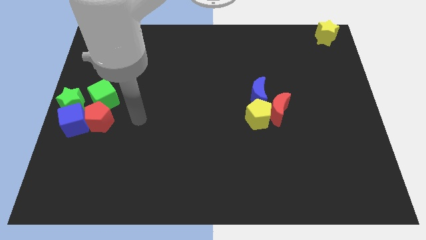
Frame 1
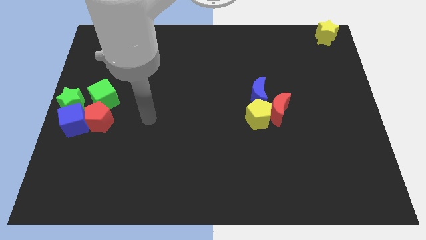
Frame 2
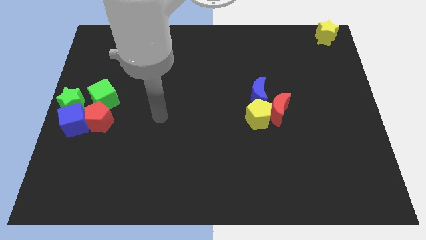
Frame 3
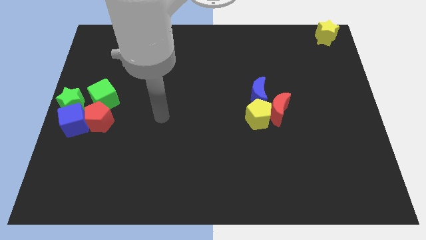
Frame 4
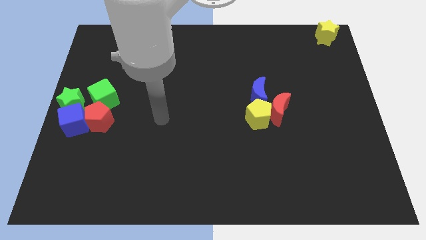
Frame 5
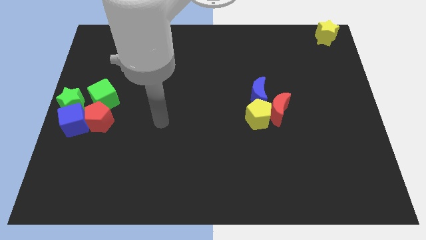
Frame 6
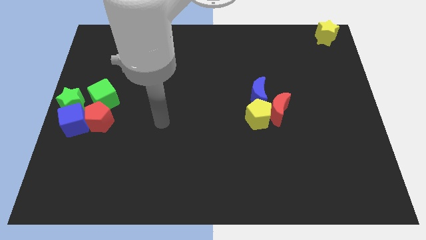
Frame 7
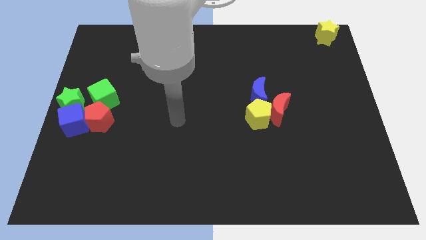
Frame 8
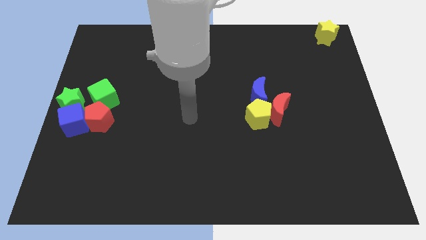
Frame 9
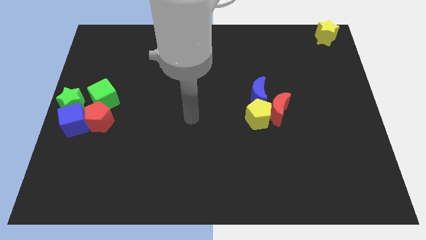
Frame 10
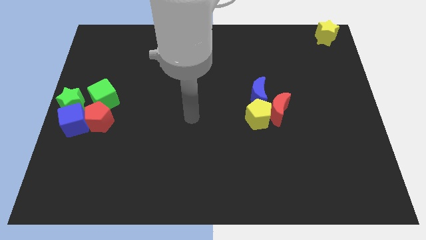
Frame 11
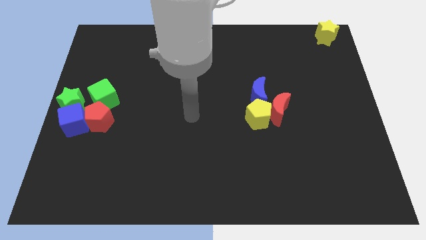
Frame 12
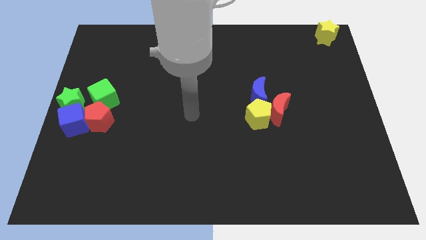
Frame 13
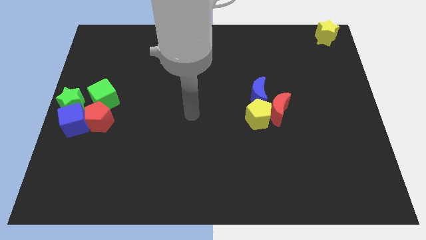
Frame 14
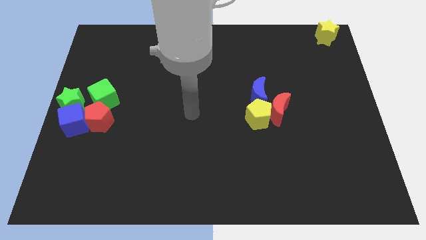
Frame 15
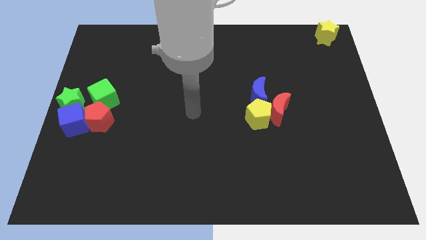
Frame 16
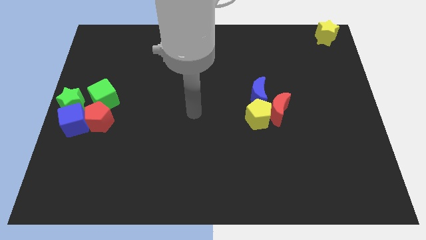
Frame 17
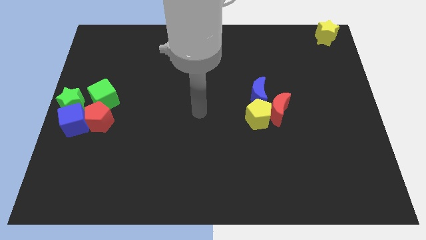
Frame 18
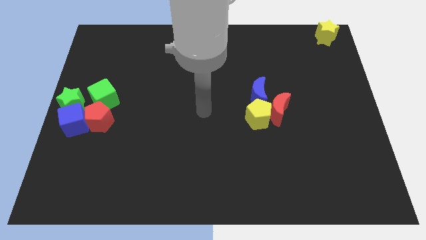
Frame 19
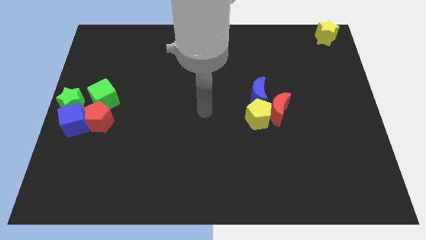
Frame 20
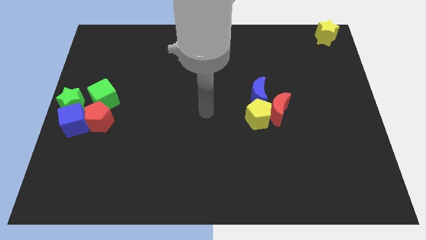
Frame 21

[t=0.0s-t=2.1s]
go to the center of the board

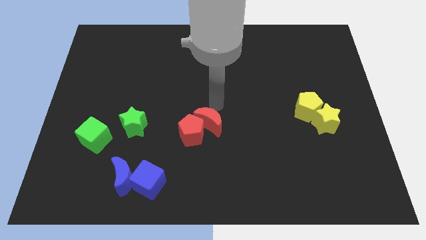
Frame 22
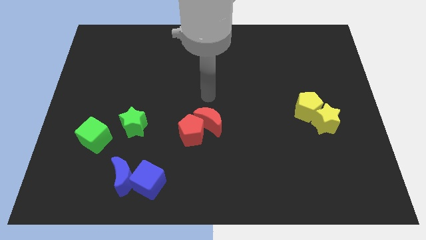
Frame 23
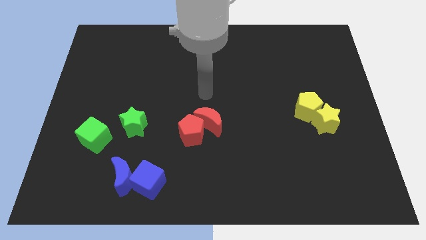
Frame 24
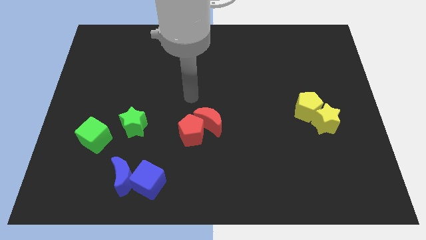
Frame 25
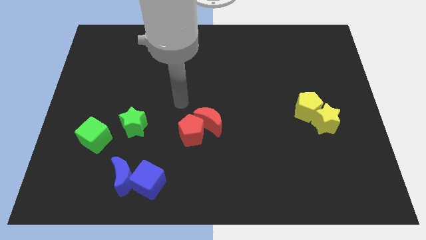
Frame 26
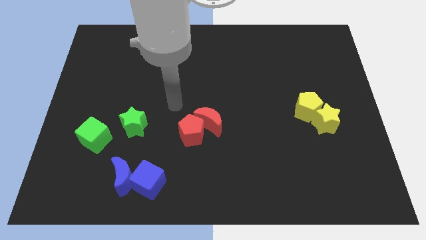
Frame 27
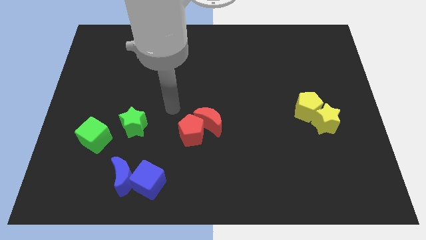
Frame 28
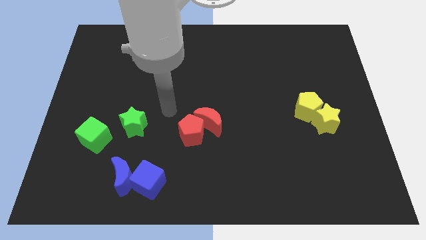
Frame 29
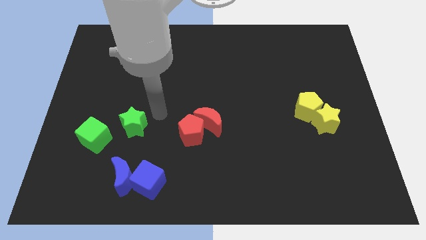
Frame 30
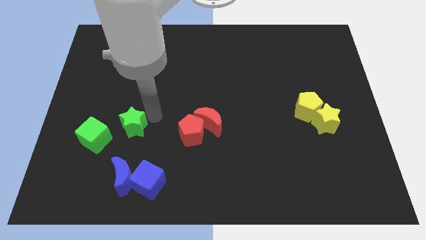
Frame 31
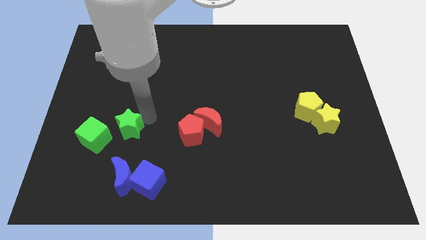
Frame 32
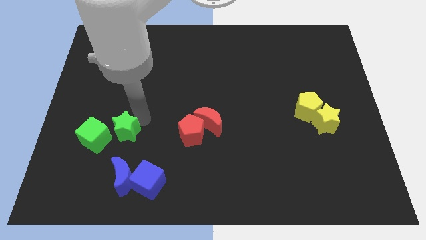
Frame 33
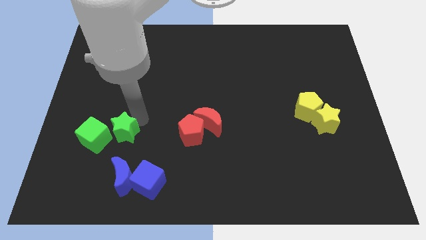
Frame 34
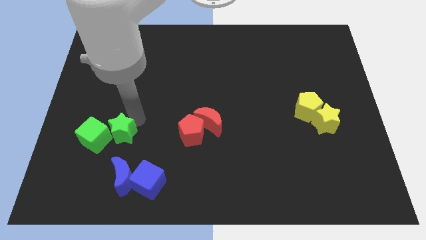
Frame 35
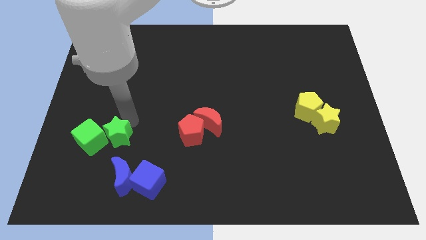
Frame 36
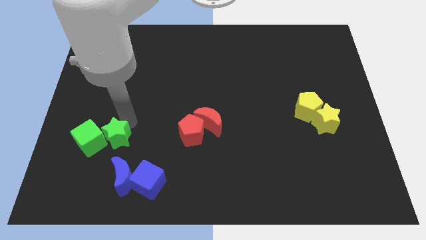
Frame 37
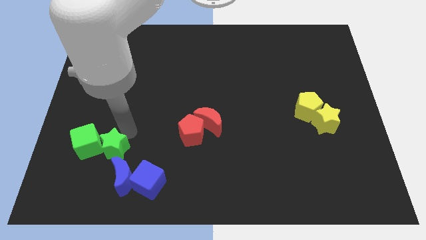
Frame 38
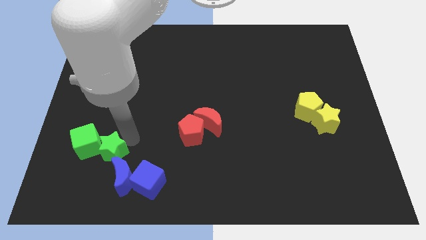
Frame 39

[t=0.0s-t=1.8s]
move the green star to the right side of the green cube

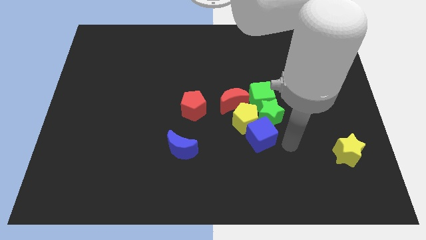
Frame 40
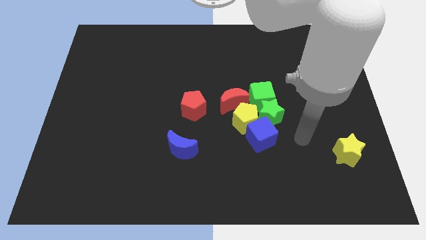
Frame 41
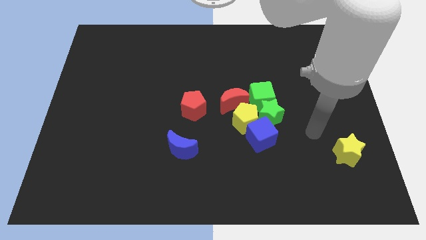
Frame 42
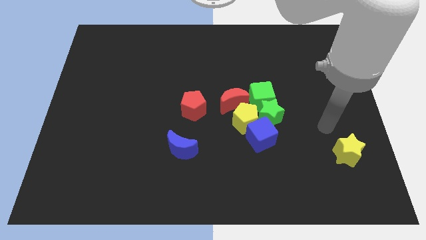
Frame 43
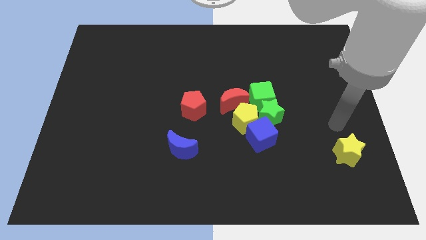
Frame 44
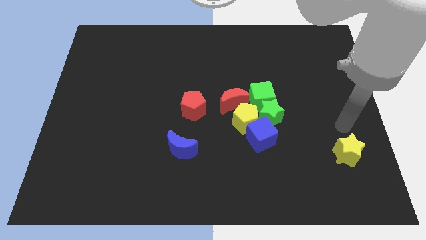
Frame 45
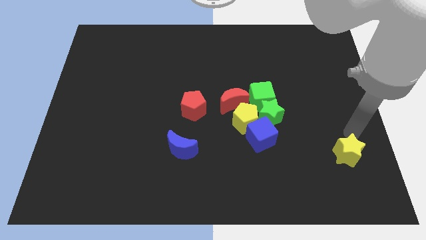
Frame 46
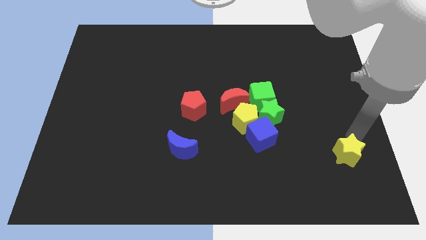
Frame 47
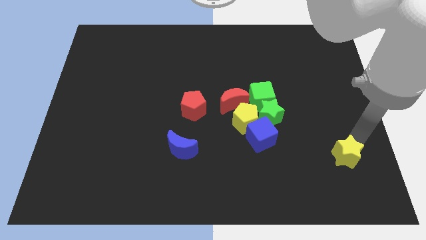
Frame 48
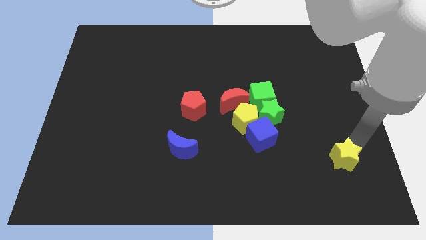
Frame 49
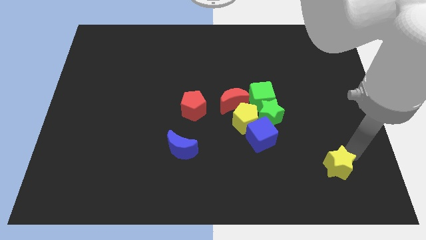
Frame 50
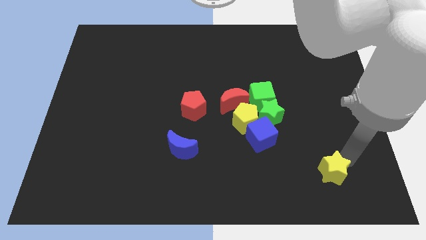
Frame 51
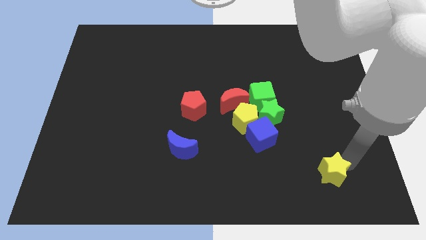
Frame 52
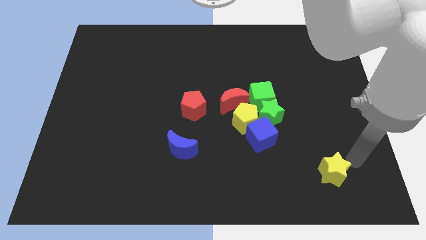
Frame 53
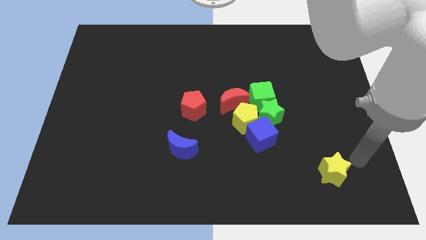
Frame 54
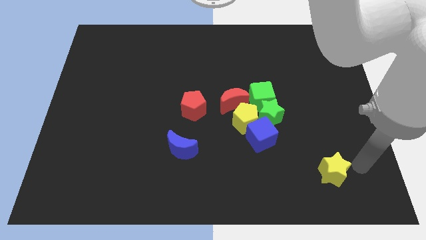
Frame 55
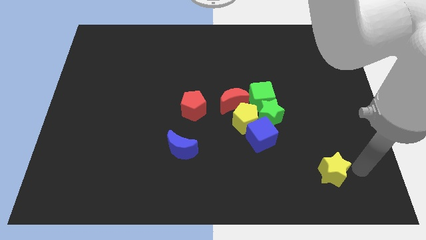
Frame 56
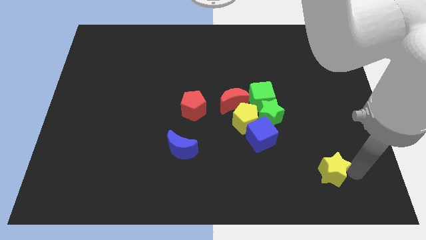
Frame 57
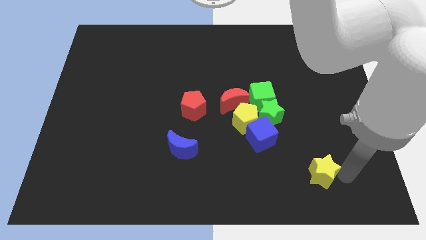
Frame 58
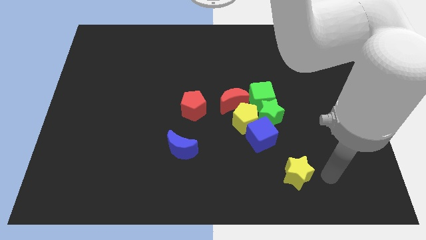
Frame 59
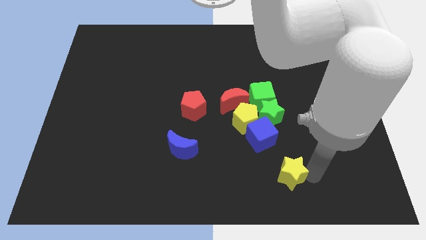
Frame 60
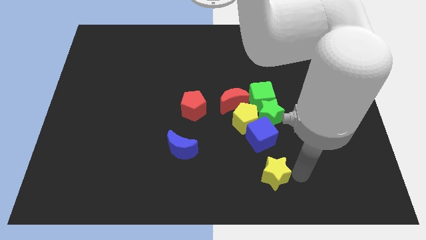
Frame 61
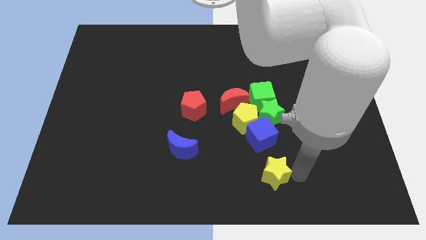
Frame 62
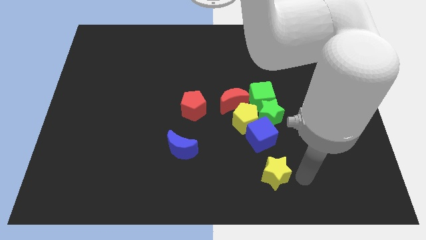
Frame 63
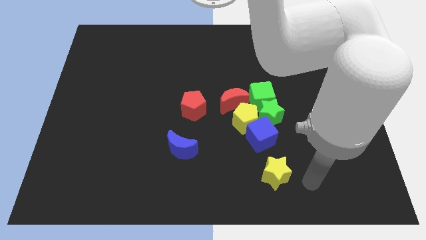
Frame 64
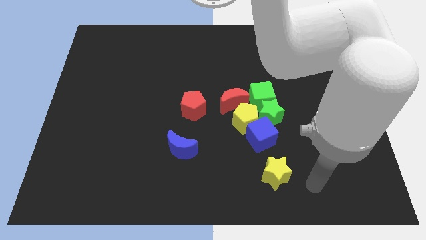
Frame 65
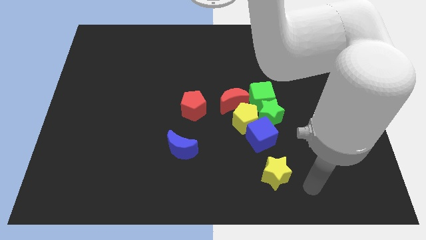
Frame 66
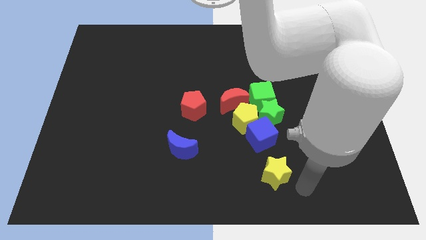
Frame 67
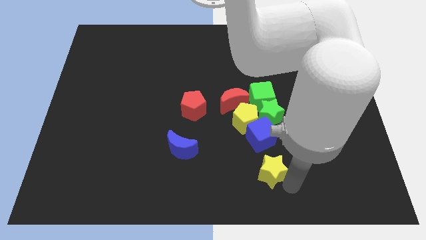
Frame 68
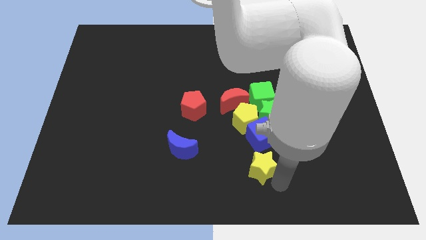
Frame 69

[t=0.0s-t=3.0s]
place the yellow star below the blue cube

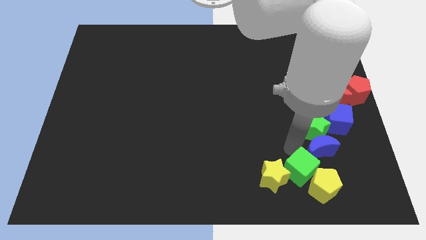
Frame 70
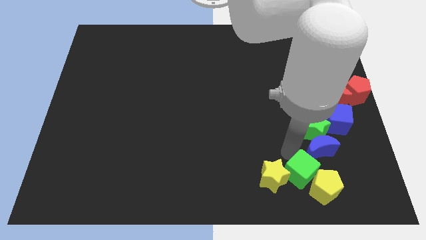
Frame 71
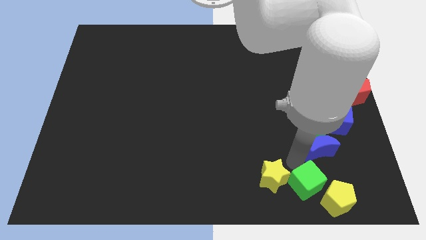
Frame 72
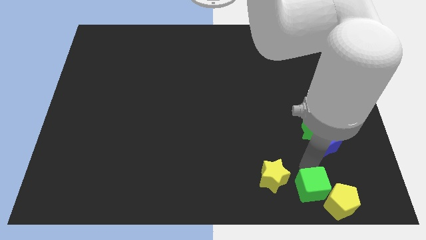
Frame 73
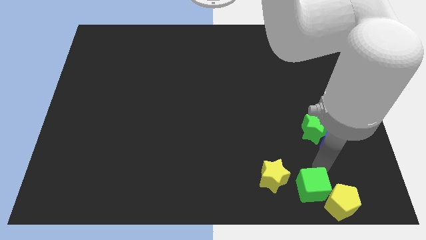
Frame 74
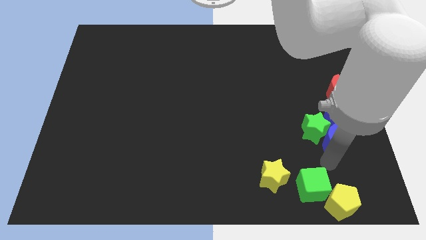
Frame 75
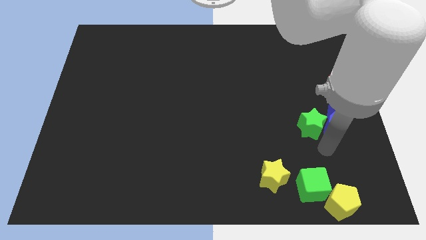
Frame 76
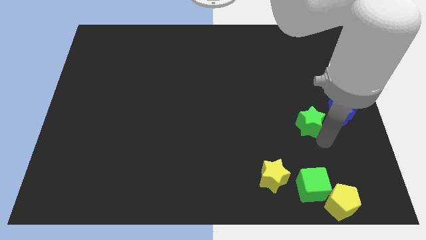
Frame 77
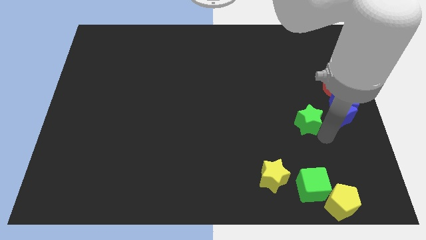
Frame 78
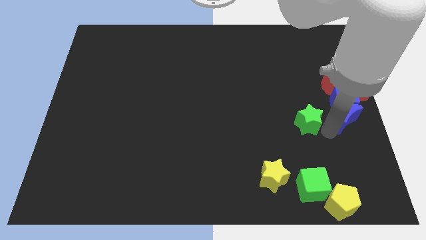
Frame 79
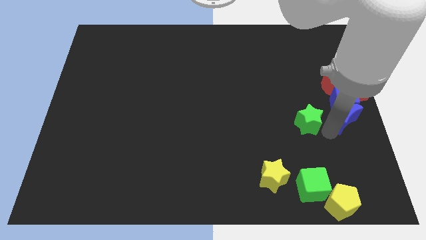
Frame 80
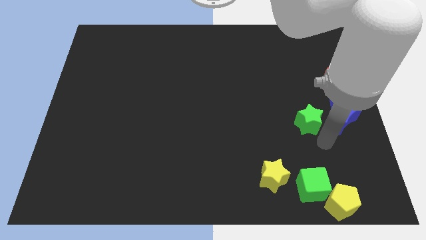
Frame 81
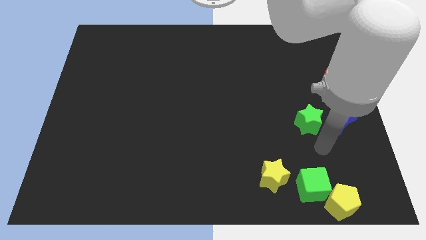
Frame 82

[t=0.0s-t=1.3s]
push the blue crescent into the blue cube

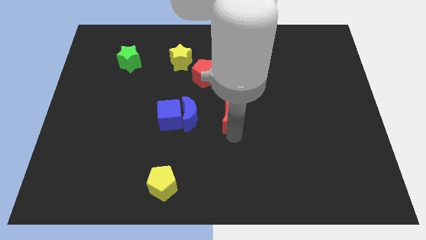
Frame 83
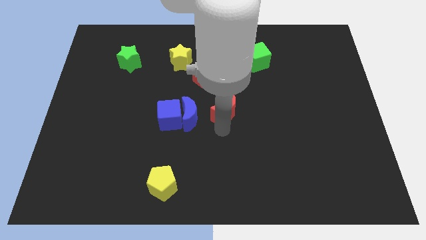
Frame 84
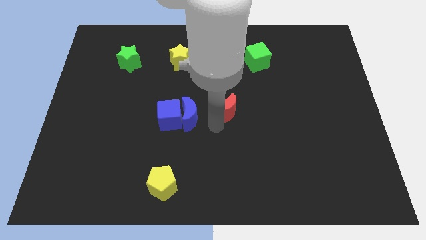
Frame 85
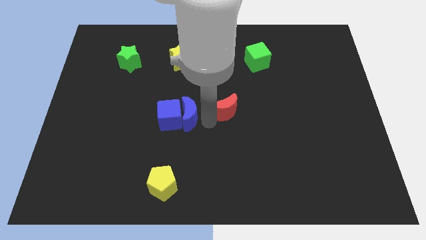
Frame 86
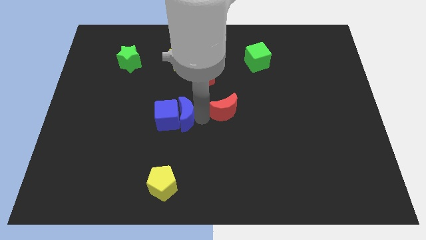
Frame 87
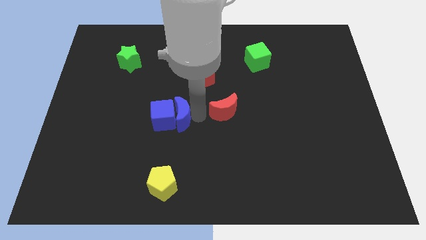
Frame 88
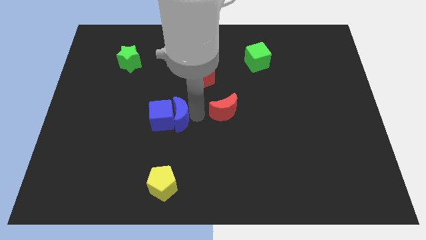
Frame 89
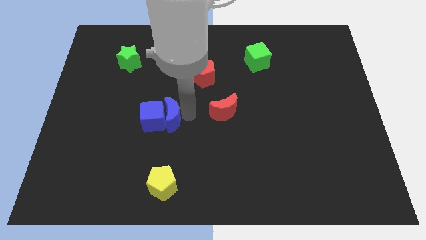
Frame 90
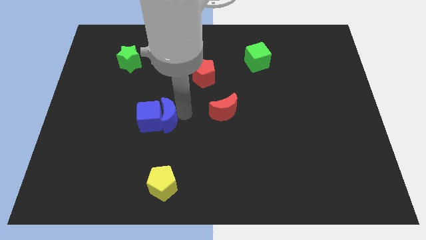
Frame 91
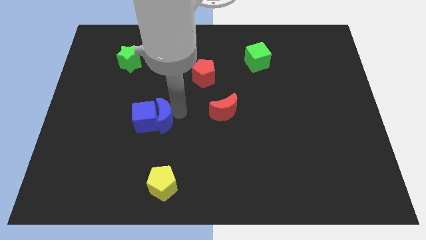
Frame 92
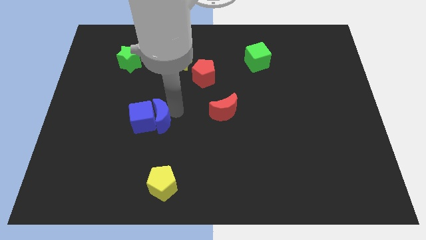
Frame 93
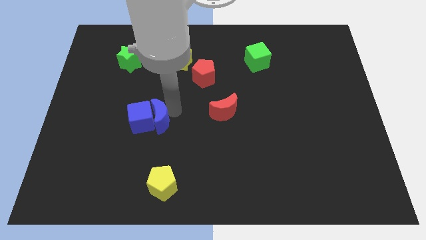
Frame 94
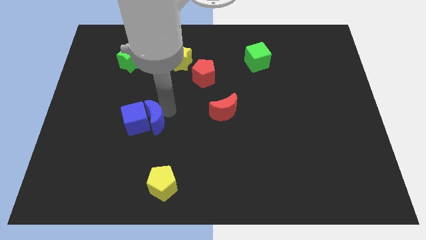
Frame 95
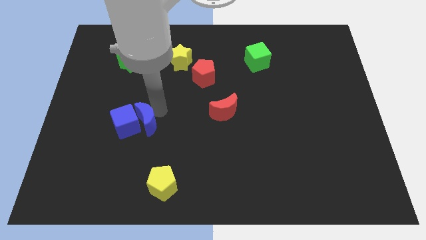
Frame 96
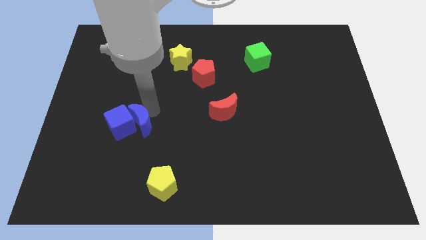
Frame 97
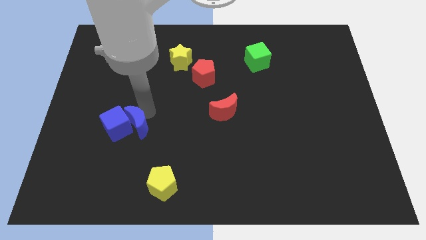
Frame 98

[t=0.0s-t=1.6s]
push blue crescent below green star
